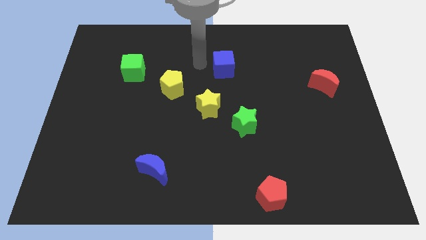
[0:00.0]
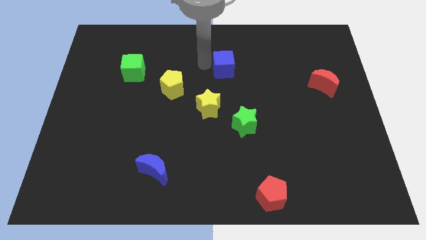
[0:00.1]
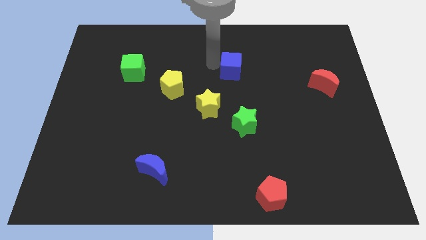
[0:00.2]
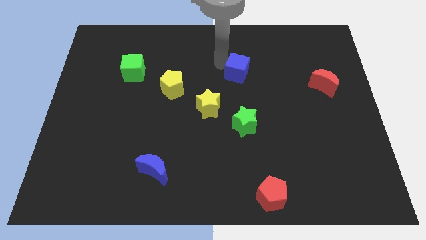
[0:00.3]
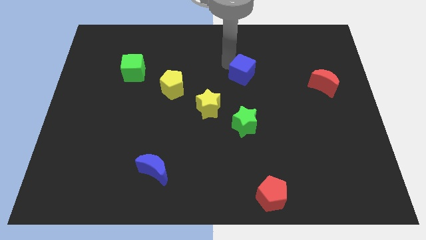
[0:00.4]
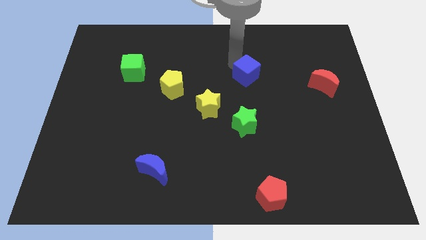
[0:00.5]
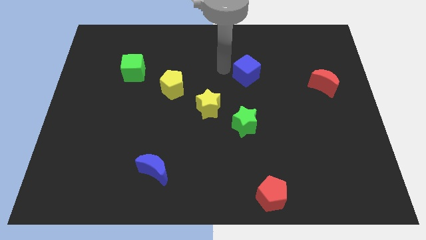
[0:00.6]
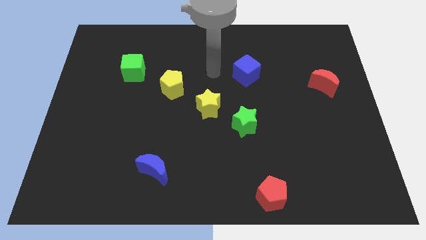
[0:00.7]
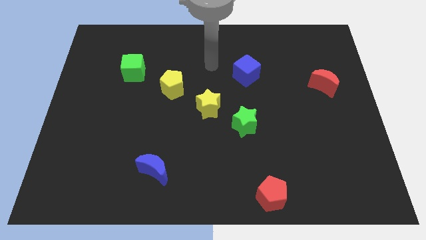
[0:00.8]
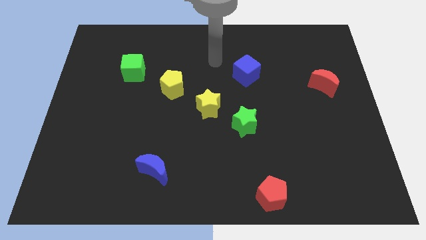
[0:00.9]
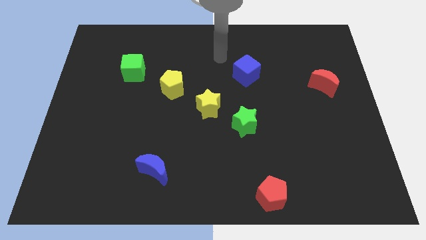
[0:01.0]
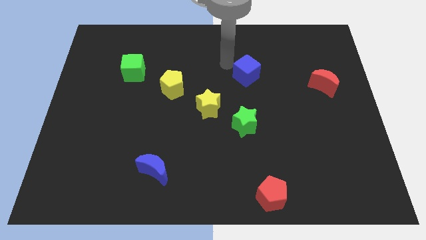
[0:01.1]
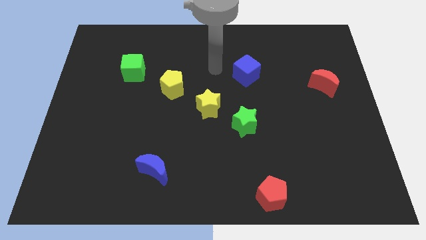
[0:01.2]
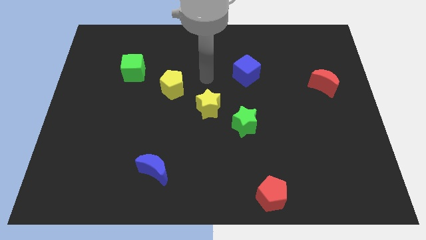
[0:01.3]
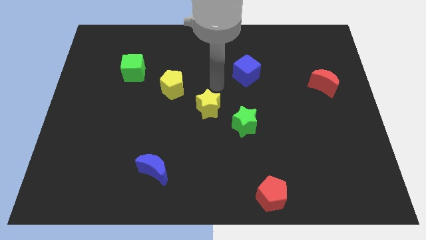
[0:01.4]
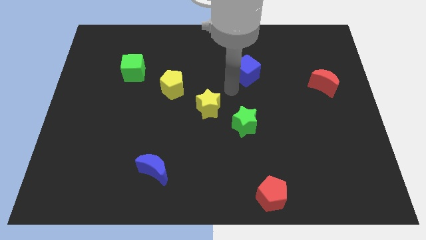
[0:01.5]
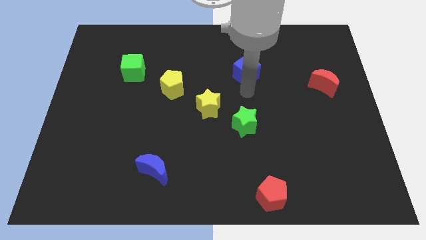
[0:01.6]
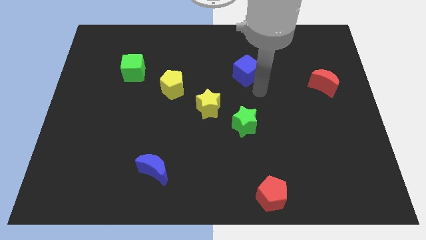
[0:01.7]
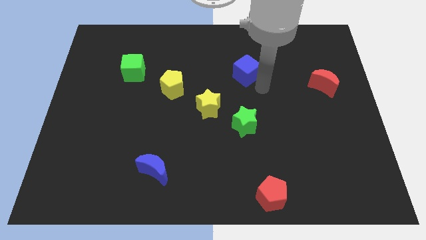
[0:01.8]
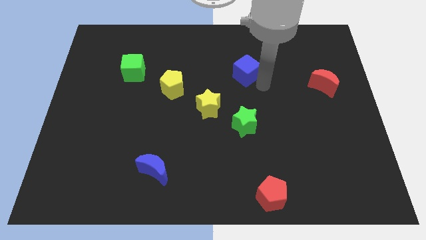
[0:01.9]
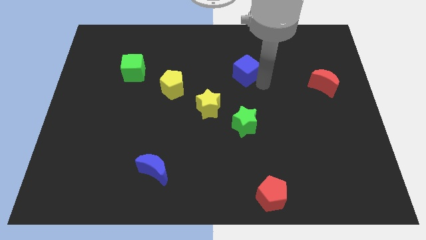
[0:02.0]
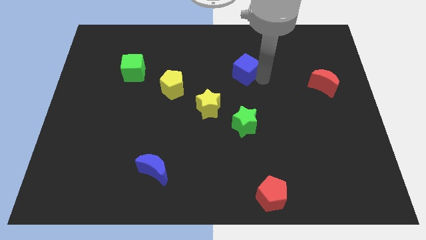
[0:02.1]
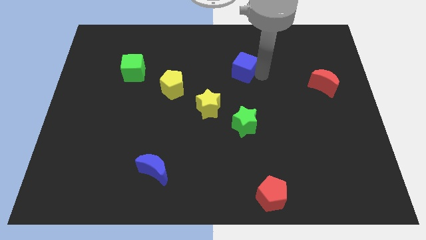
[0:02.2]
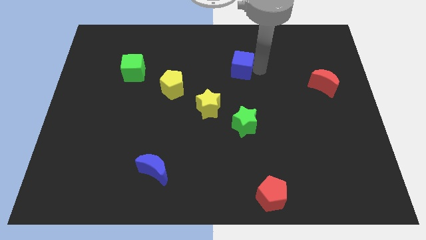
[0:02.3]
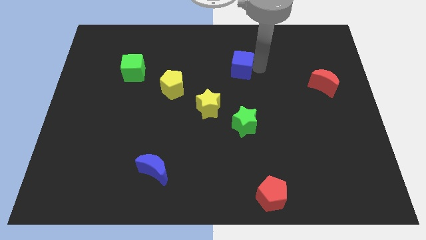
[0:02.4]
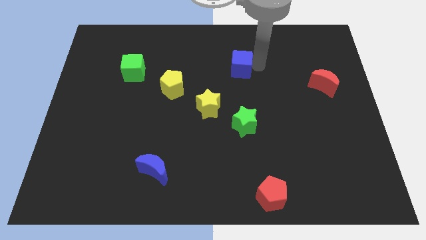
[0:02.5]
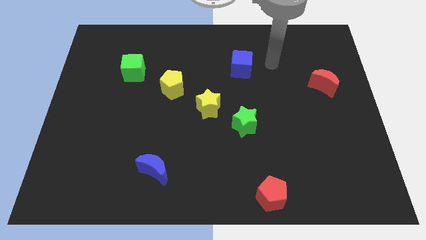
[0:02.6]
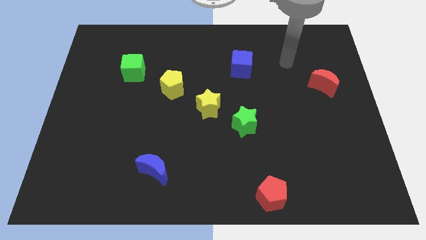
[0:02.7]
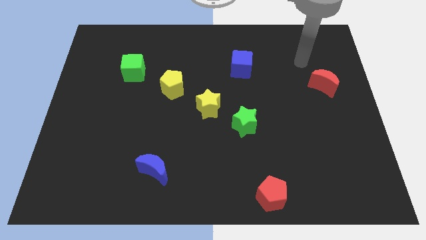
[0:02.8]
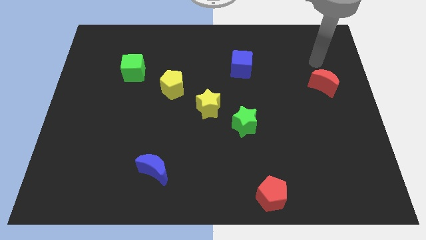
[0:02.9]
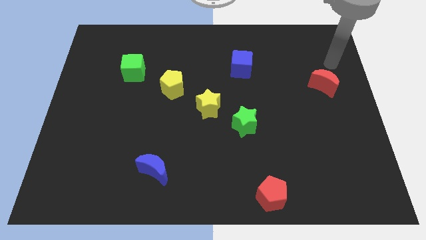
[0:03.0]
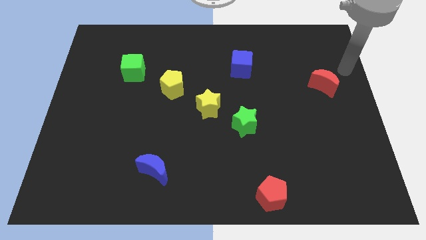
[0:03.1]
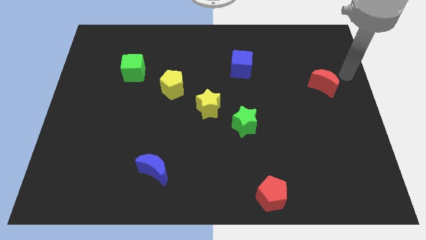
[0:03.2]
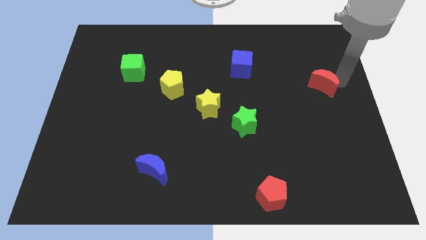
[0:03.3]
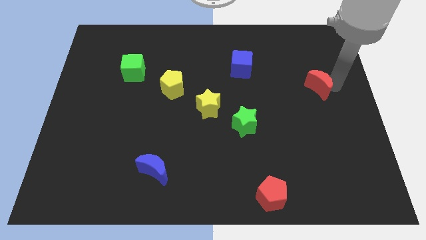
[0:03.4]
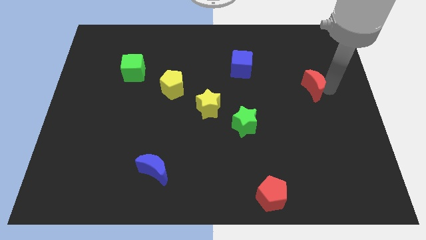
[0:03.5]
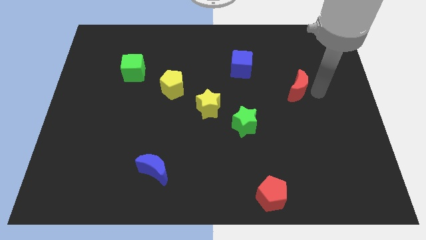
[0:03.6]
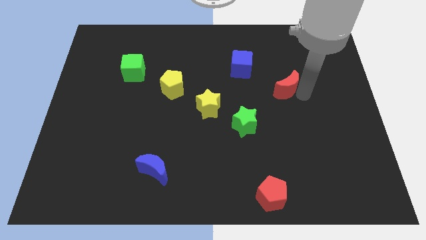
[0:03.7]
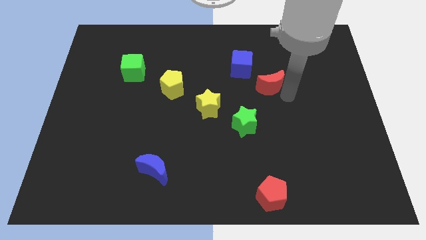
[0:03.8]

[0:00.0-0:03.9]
push blue cube slightly upwards

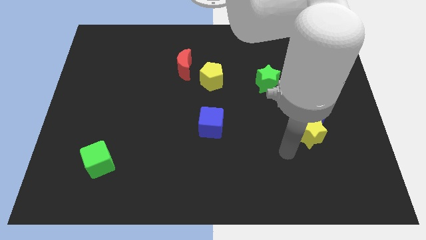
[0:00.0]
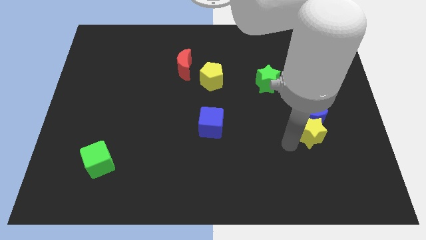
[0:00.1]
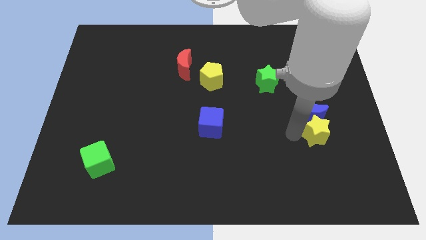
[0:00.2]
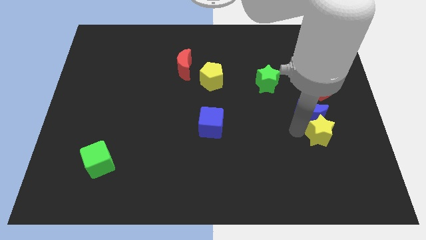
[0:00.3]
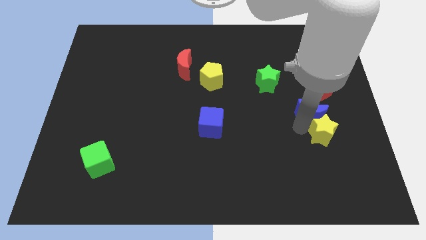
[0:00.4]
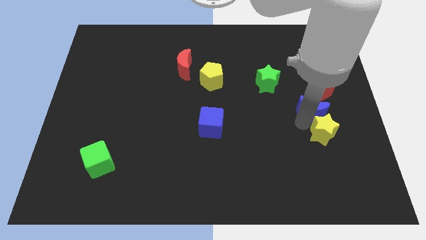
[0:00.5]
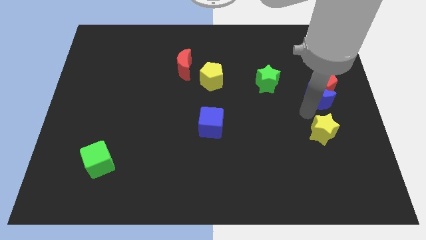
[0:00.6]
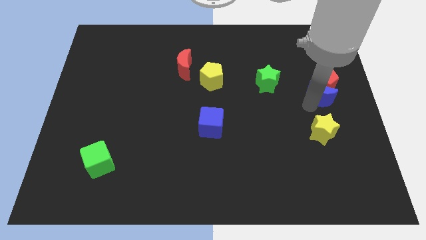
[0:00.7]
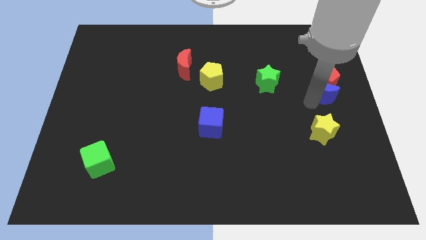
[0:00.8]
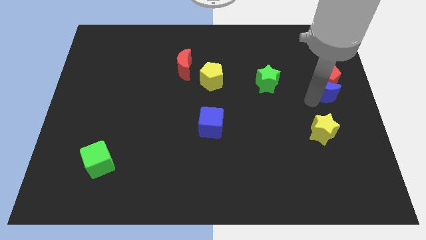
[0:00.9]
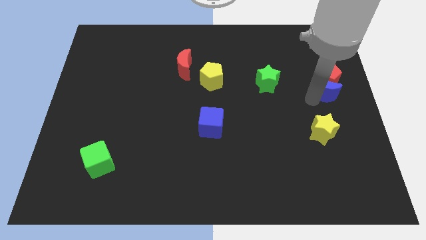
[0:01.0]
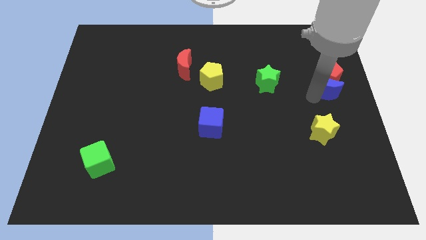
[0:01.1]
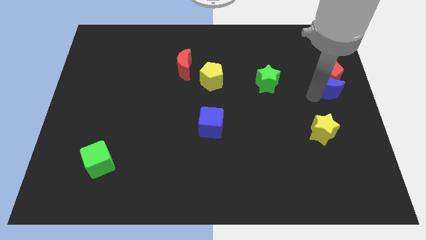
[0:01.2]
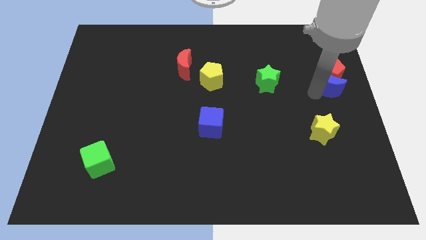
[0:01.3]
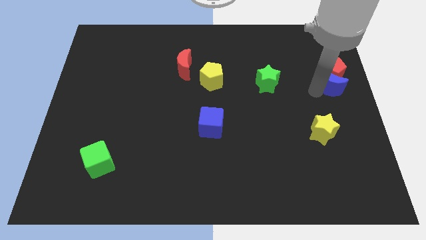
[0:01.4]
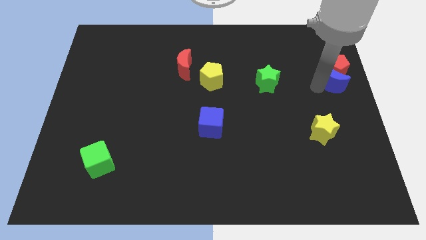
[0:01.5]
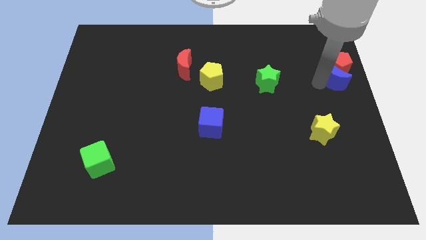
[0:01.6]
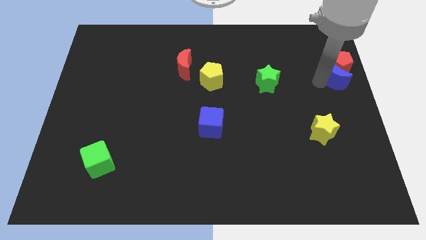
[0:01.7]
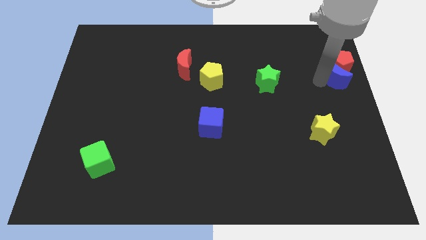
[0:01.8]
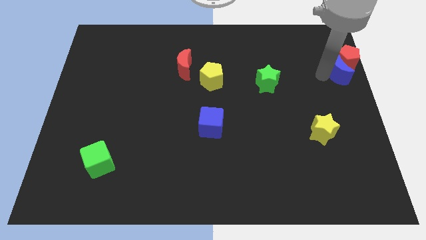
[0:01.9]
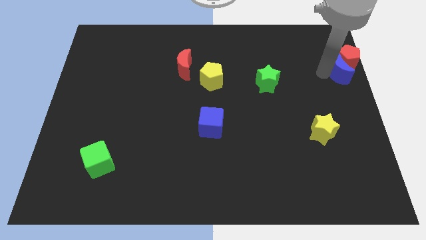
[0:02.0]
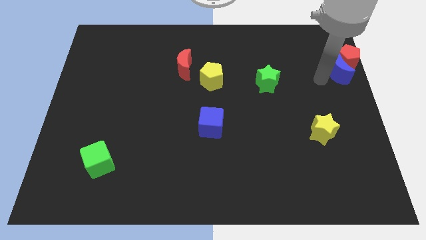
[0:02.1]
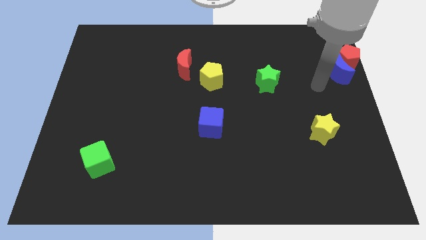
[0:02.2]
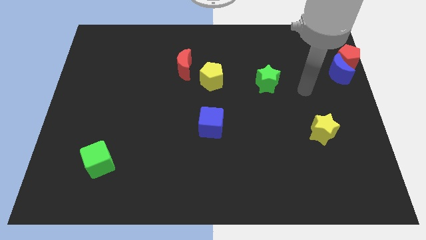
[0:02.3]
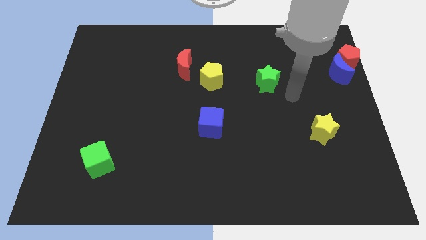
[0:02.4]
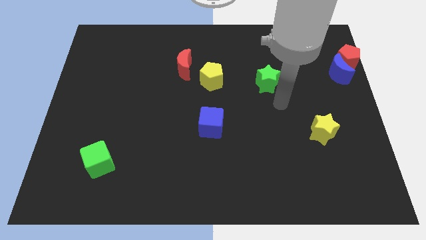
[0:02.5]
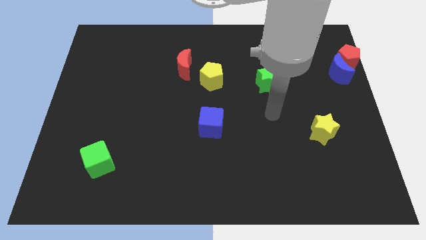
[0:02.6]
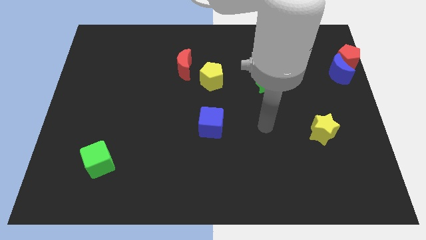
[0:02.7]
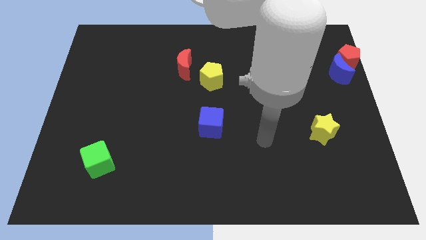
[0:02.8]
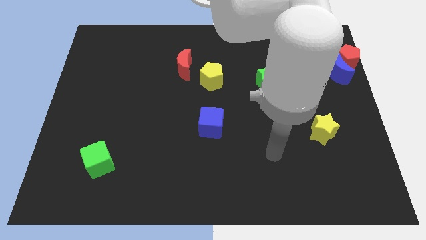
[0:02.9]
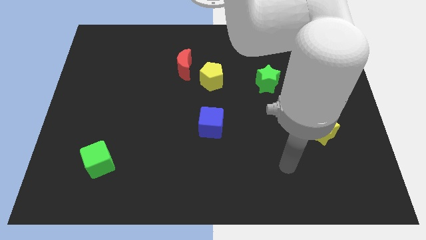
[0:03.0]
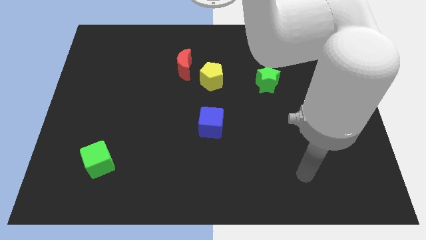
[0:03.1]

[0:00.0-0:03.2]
move the blue moon and red pentagon at the right side top corner

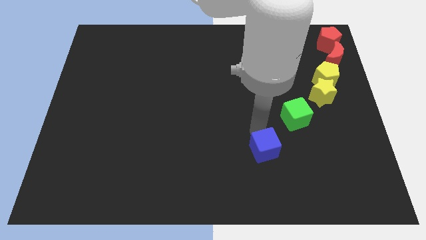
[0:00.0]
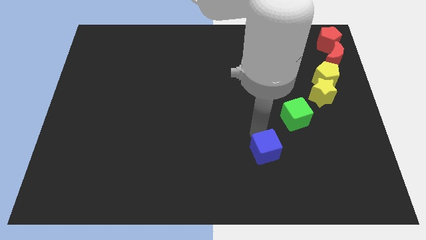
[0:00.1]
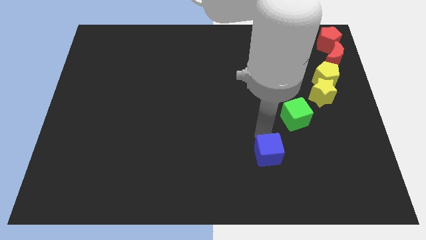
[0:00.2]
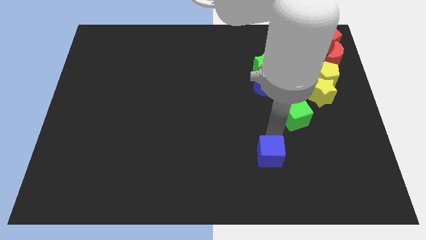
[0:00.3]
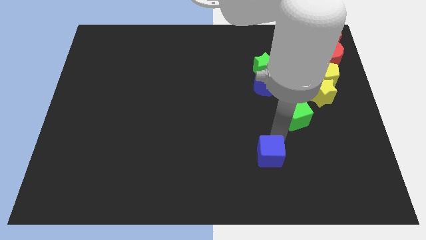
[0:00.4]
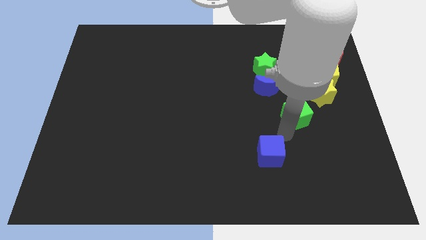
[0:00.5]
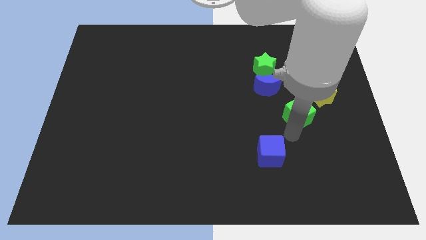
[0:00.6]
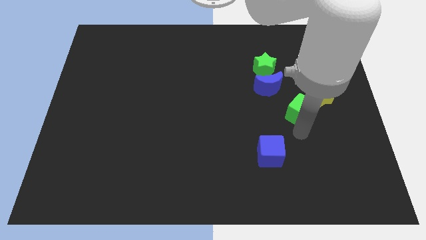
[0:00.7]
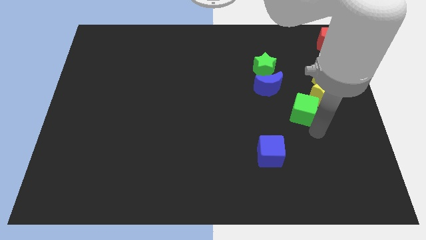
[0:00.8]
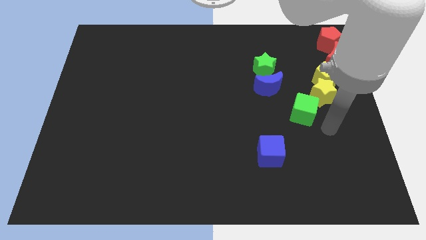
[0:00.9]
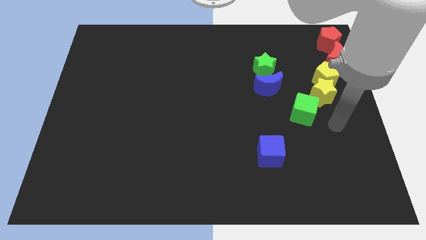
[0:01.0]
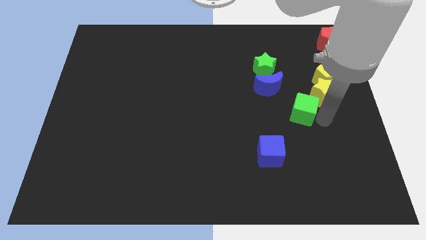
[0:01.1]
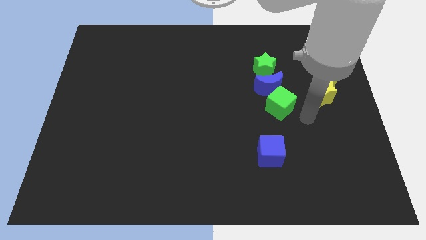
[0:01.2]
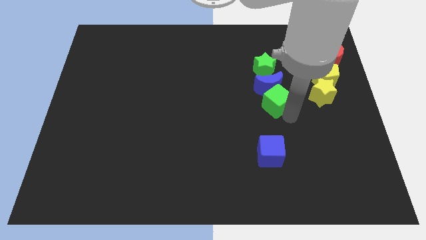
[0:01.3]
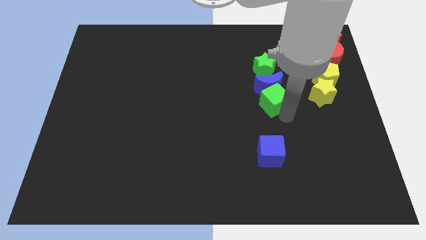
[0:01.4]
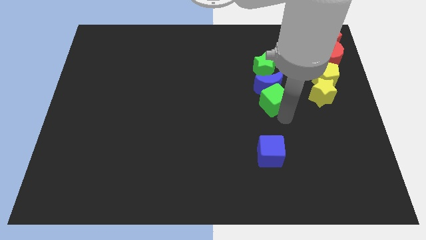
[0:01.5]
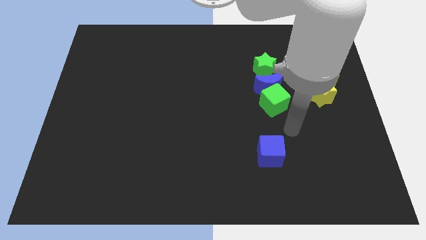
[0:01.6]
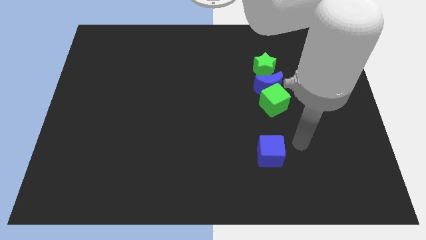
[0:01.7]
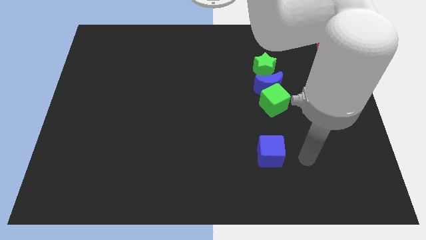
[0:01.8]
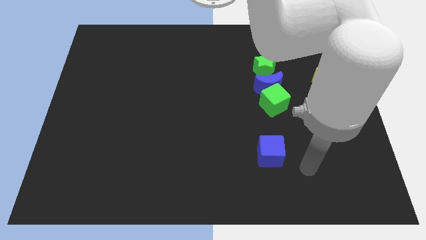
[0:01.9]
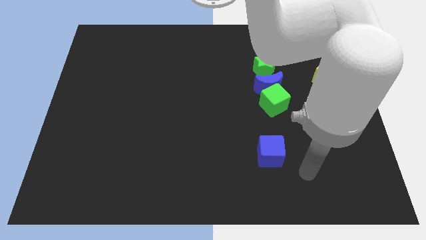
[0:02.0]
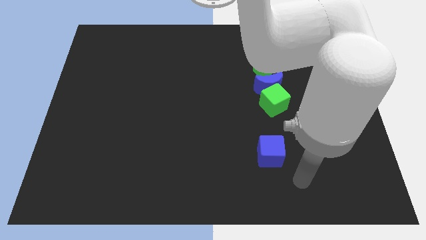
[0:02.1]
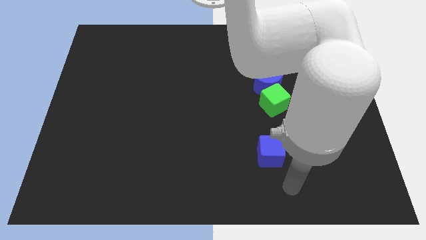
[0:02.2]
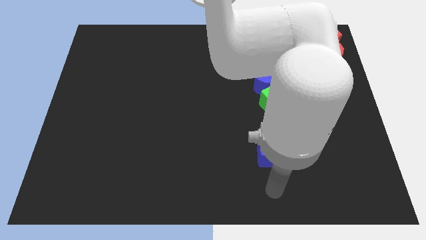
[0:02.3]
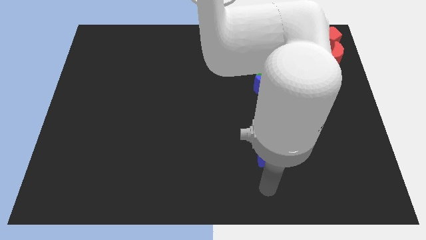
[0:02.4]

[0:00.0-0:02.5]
put the green cube underneath the blue crescent
